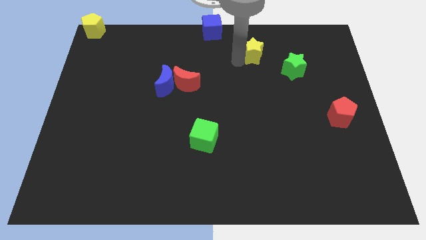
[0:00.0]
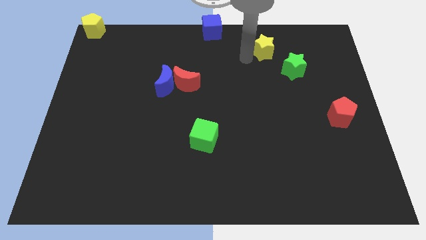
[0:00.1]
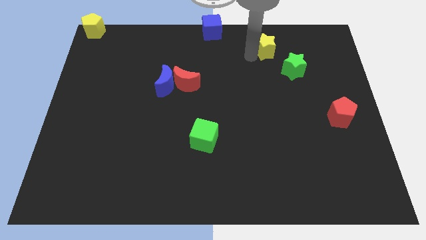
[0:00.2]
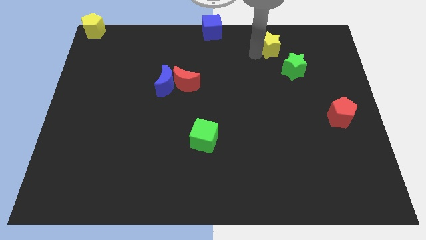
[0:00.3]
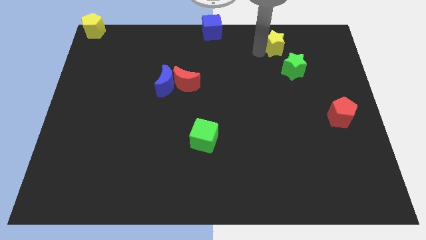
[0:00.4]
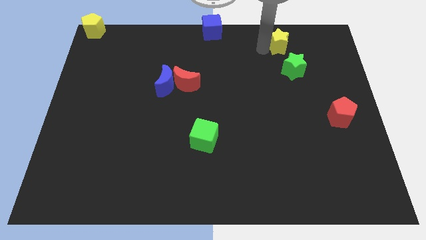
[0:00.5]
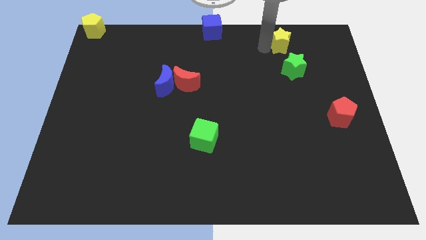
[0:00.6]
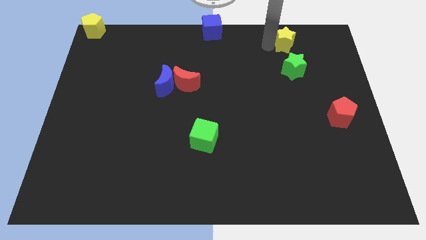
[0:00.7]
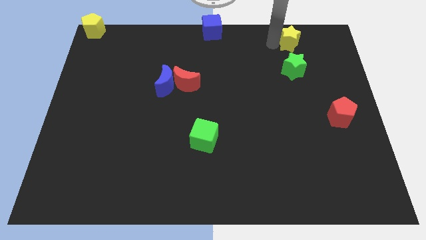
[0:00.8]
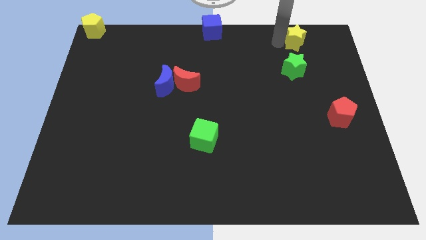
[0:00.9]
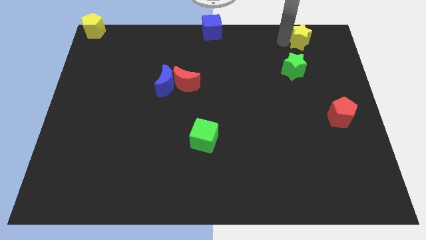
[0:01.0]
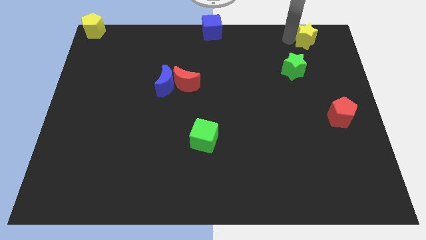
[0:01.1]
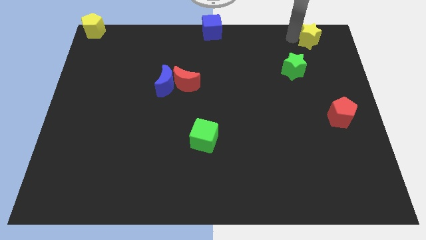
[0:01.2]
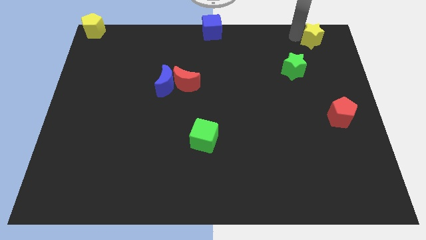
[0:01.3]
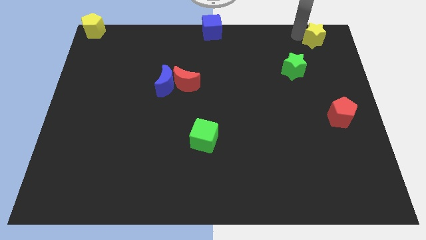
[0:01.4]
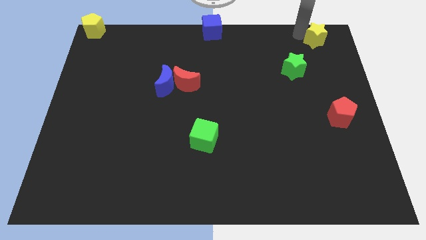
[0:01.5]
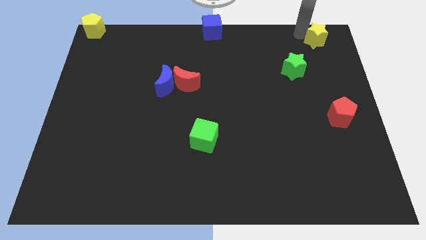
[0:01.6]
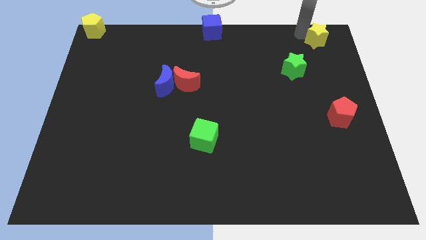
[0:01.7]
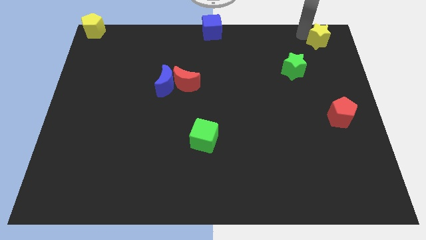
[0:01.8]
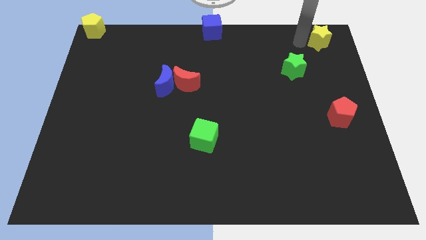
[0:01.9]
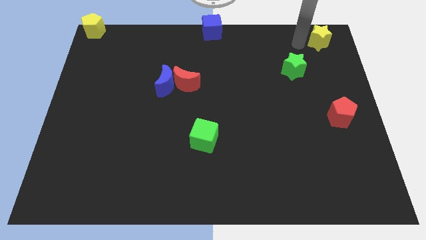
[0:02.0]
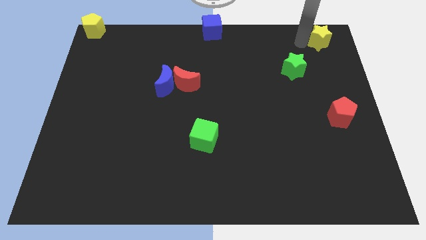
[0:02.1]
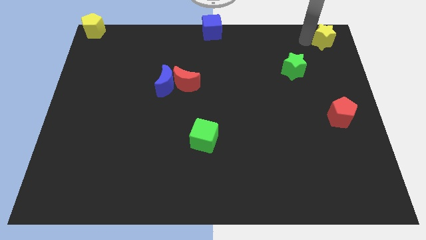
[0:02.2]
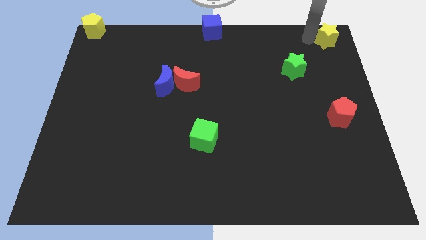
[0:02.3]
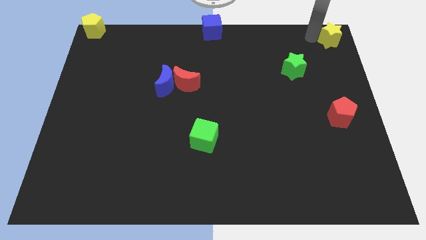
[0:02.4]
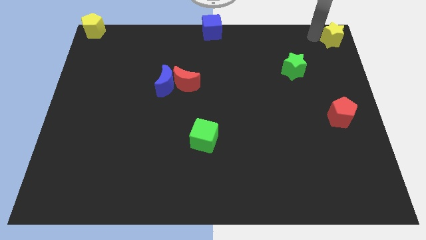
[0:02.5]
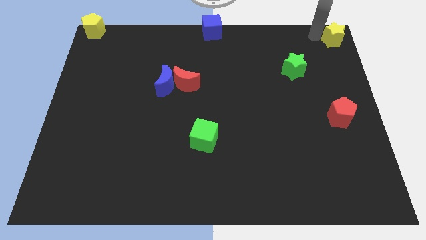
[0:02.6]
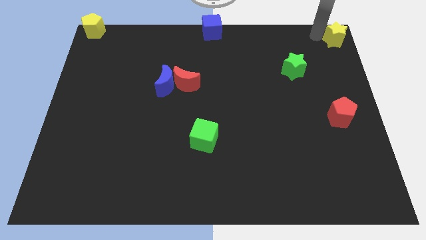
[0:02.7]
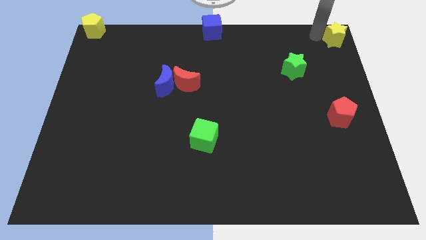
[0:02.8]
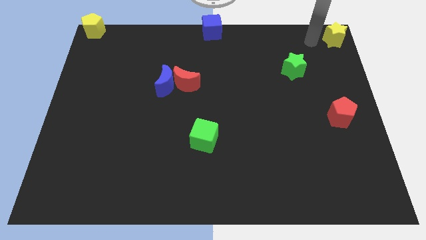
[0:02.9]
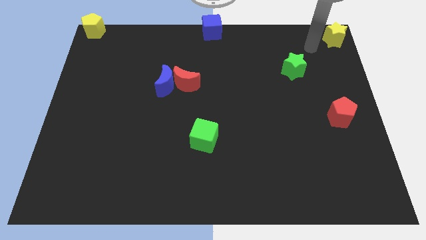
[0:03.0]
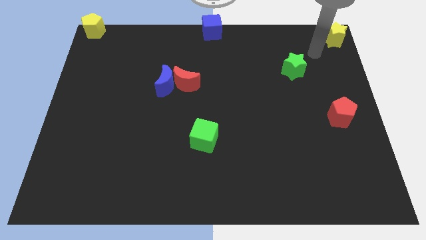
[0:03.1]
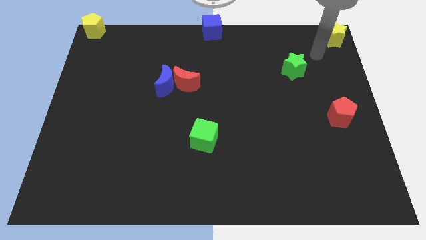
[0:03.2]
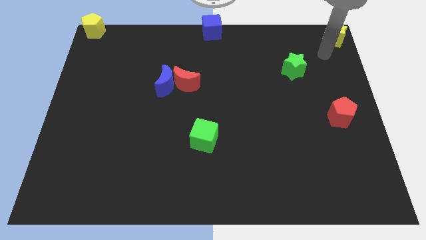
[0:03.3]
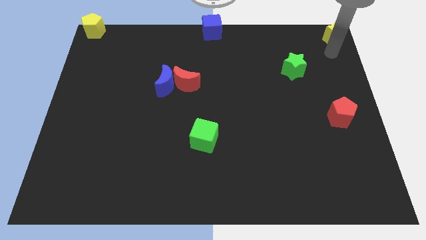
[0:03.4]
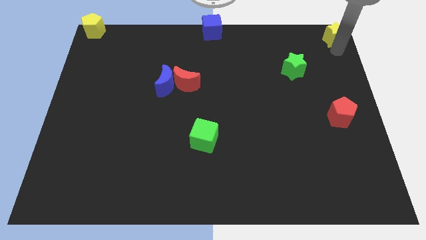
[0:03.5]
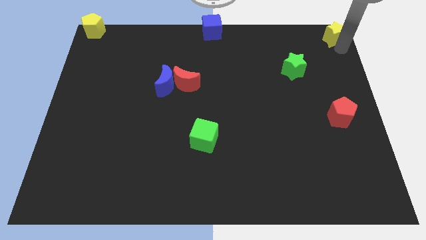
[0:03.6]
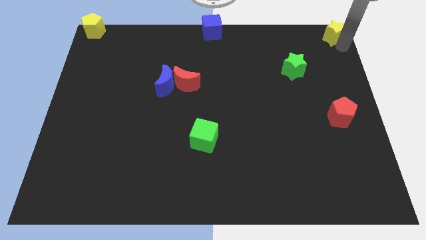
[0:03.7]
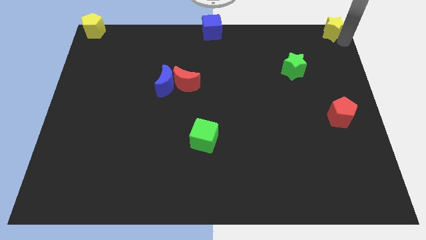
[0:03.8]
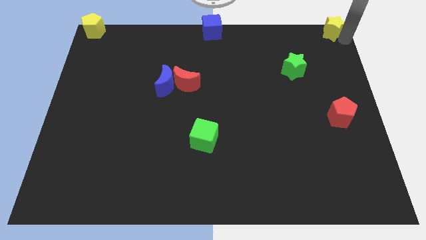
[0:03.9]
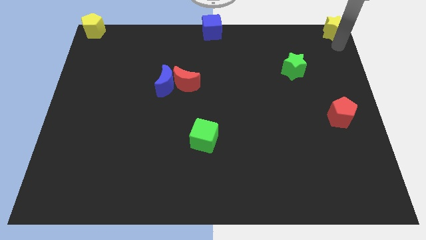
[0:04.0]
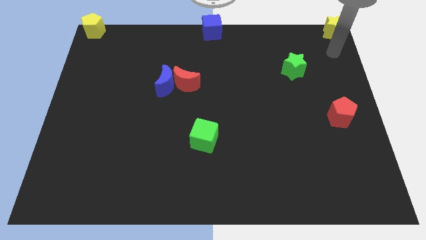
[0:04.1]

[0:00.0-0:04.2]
move the yellow star to the top right of the board

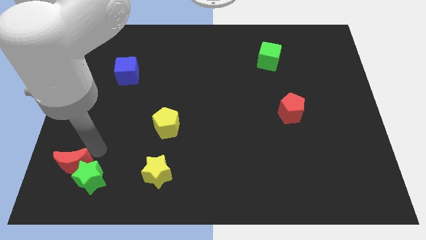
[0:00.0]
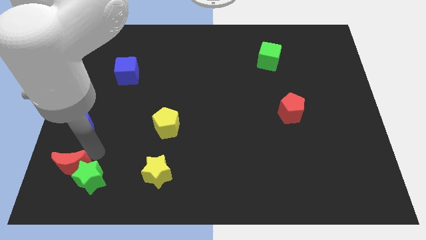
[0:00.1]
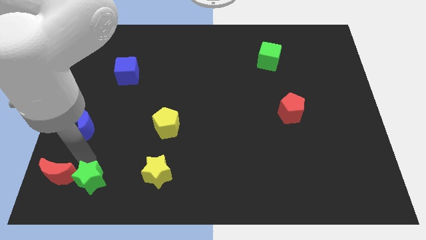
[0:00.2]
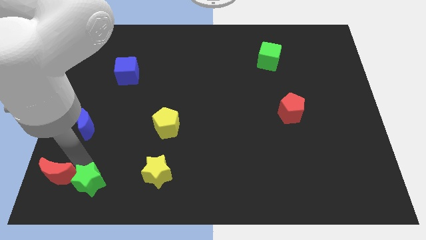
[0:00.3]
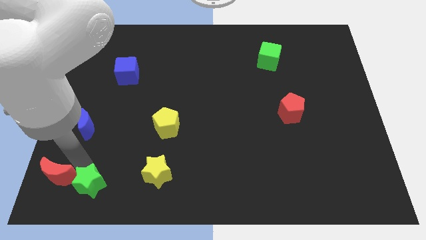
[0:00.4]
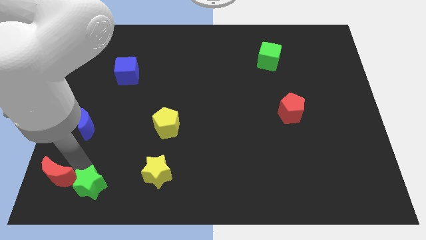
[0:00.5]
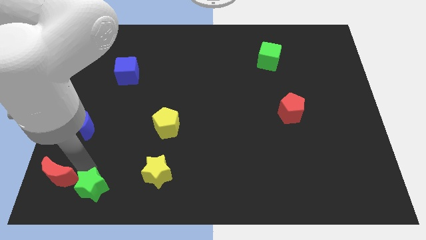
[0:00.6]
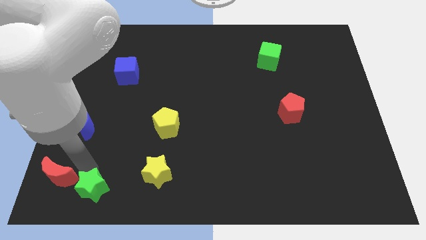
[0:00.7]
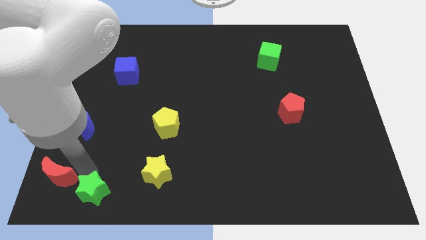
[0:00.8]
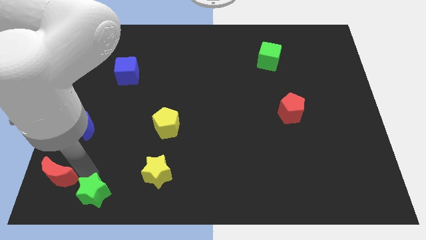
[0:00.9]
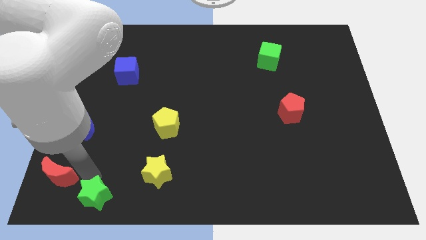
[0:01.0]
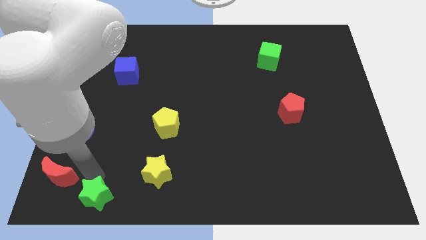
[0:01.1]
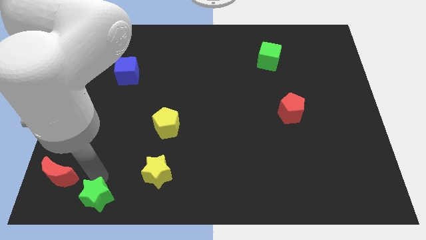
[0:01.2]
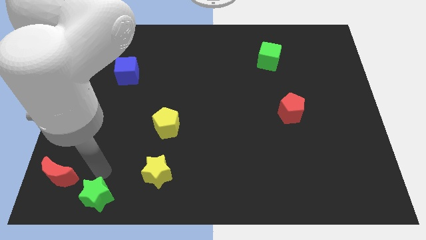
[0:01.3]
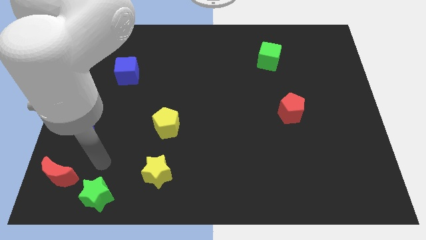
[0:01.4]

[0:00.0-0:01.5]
separate the green star from the red crescent

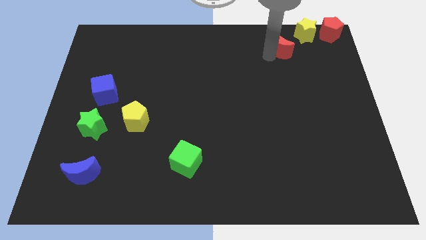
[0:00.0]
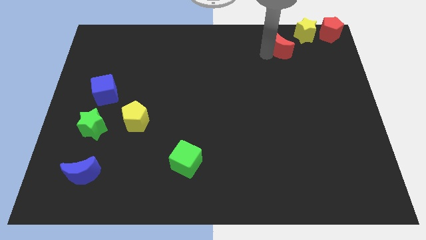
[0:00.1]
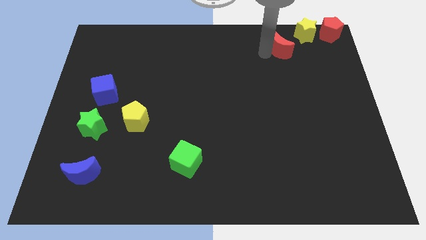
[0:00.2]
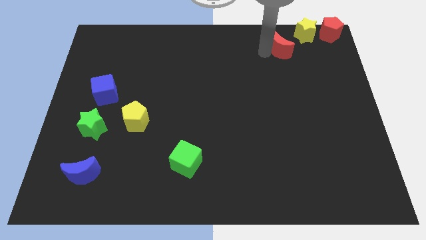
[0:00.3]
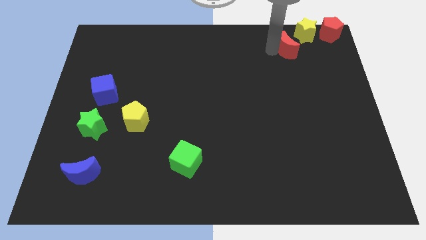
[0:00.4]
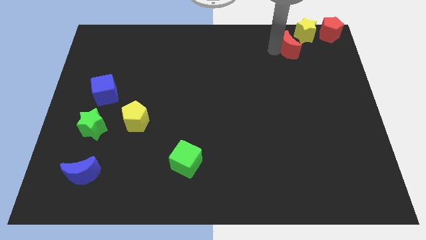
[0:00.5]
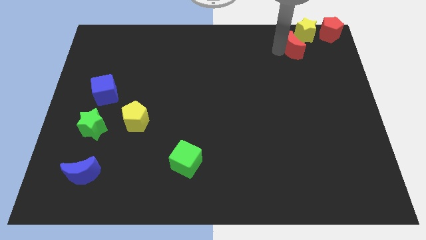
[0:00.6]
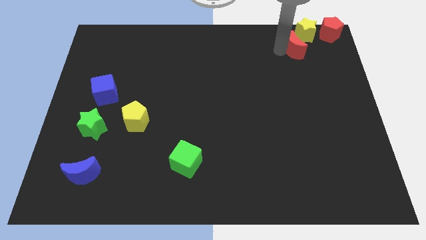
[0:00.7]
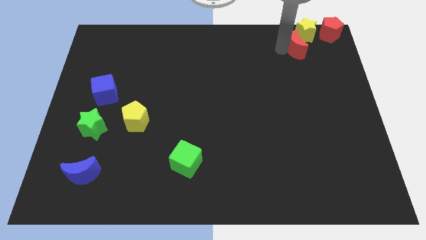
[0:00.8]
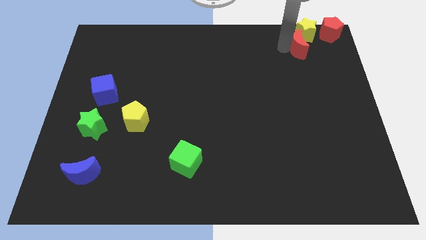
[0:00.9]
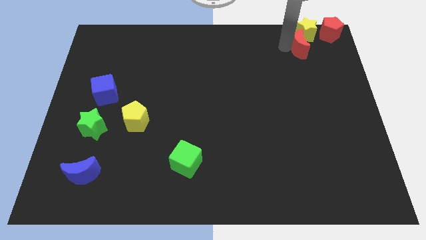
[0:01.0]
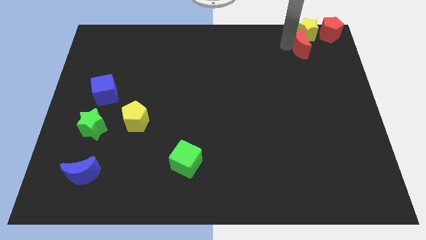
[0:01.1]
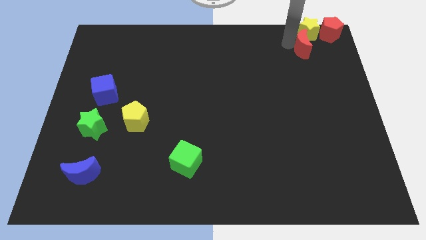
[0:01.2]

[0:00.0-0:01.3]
push the red moon into the yellow star

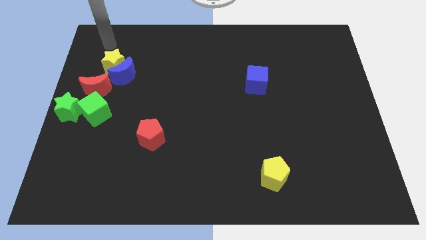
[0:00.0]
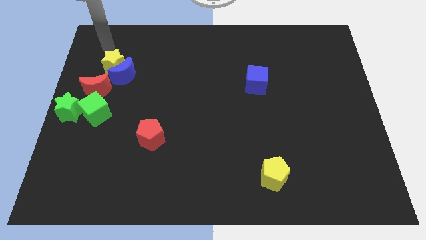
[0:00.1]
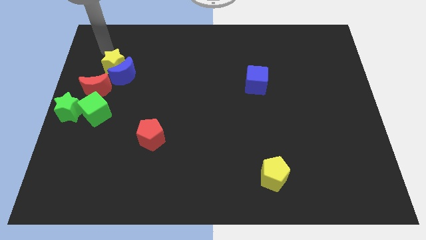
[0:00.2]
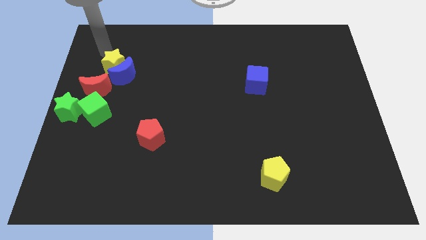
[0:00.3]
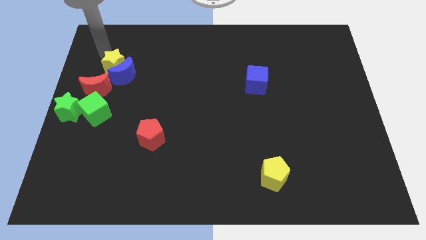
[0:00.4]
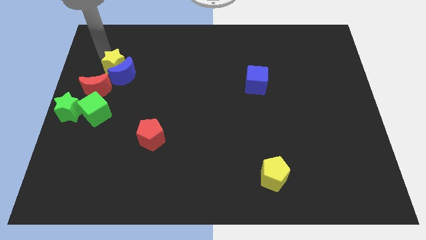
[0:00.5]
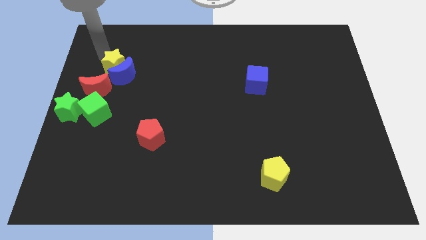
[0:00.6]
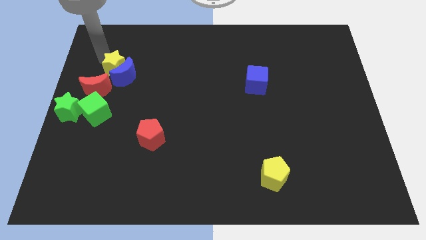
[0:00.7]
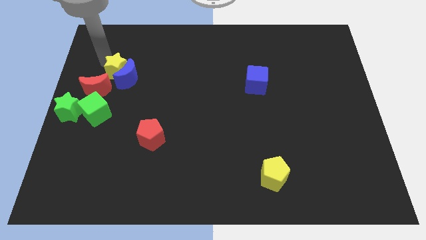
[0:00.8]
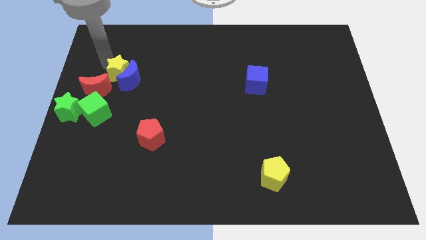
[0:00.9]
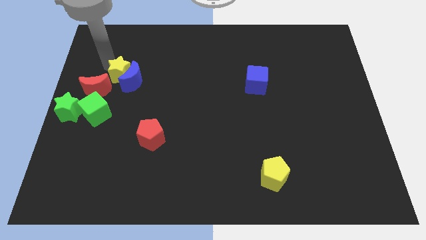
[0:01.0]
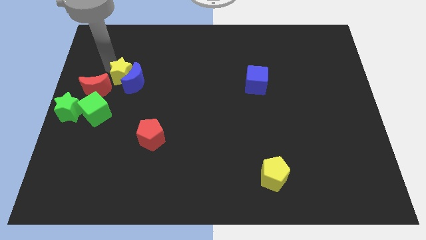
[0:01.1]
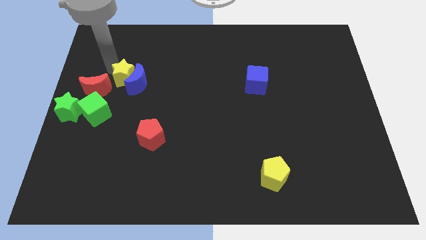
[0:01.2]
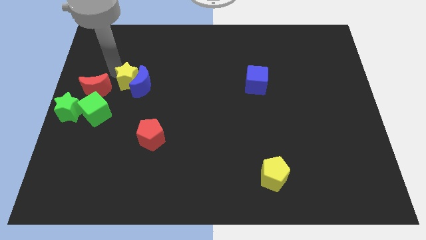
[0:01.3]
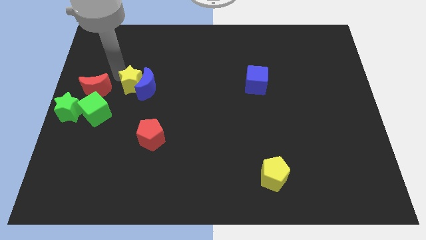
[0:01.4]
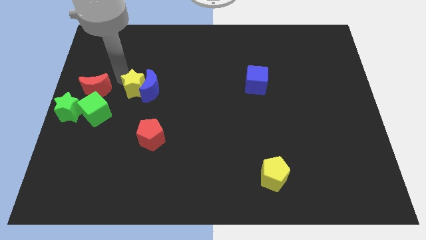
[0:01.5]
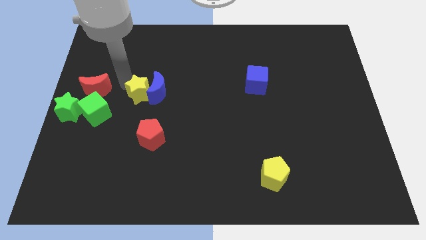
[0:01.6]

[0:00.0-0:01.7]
place the yellow star to the right of the red moon

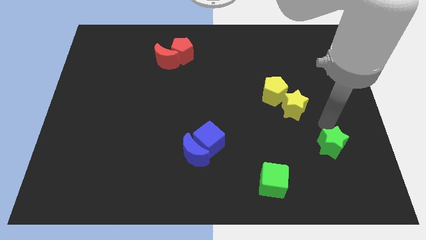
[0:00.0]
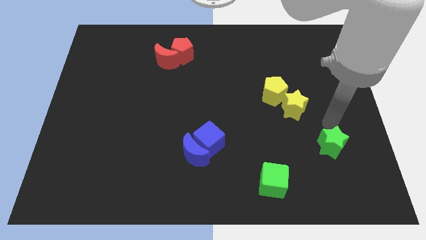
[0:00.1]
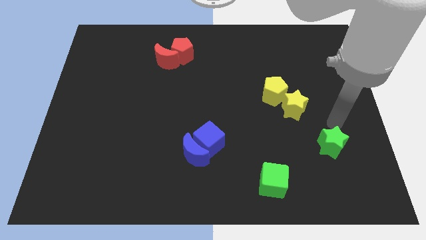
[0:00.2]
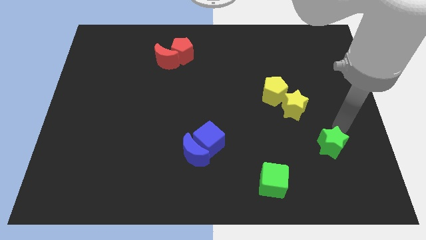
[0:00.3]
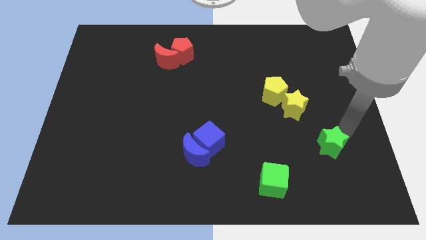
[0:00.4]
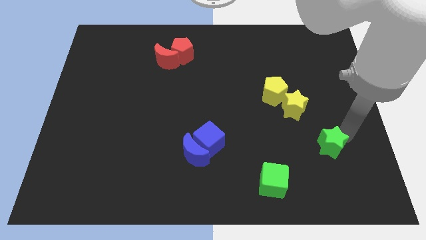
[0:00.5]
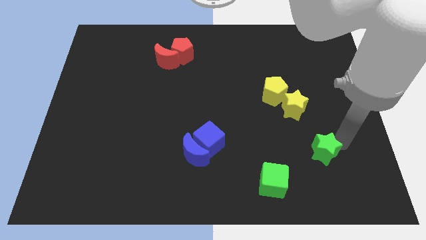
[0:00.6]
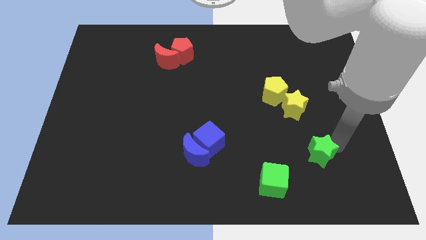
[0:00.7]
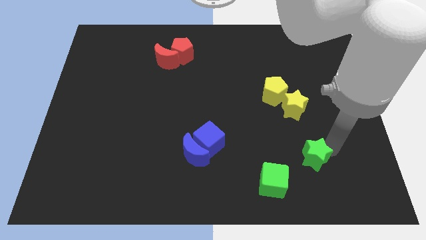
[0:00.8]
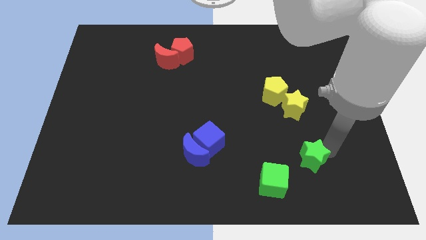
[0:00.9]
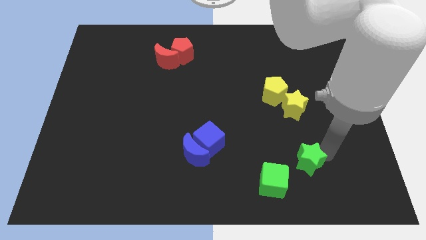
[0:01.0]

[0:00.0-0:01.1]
slide green star to the top right of green cube
